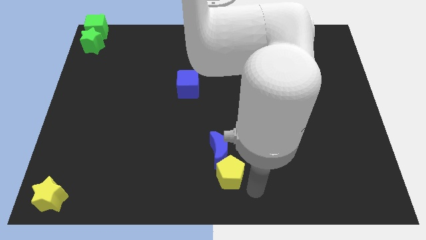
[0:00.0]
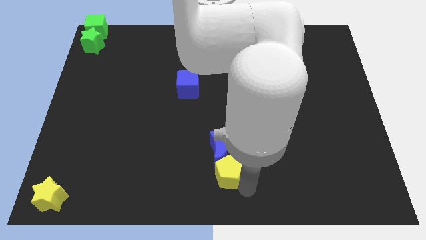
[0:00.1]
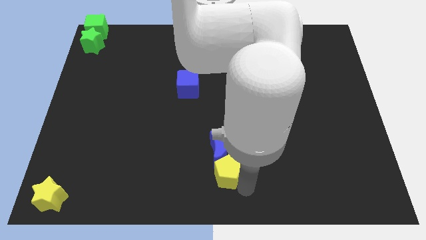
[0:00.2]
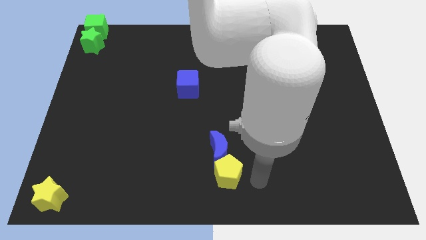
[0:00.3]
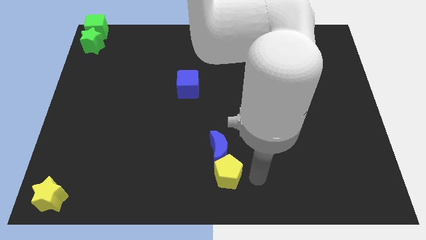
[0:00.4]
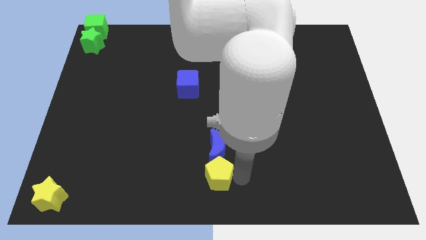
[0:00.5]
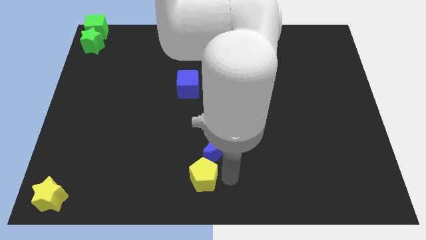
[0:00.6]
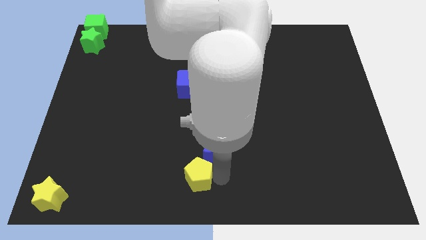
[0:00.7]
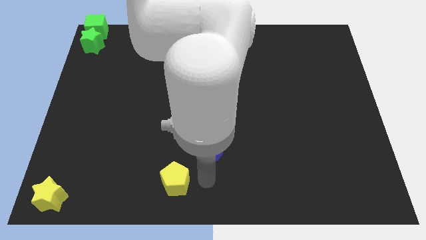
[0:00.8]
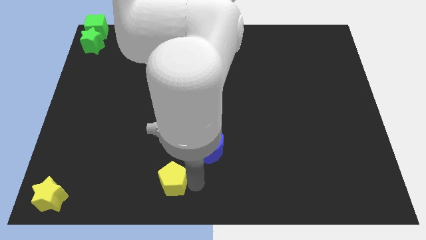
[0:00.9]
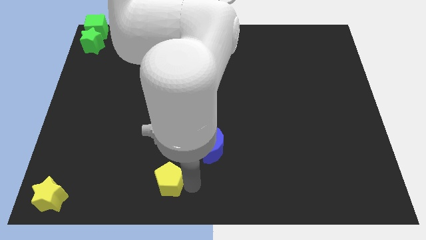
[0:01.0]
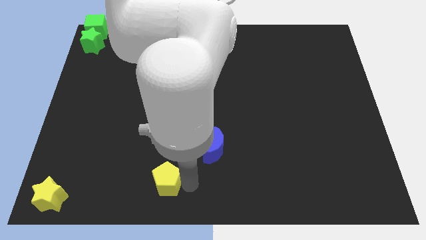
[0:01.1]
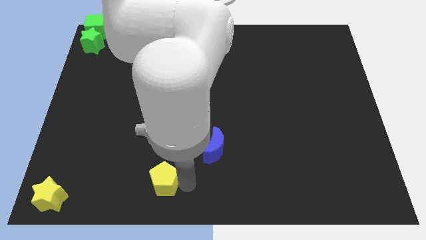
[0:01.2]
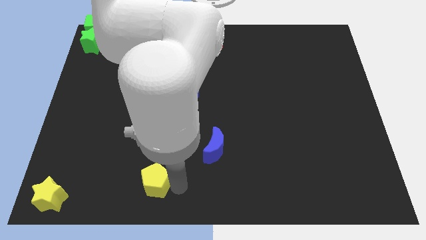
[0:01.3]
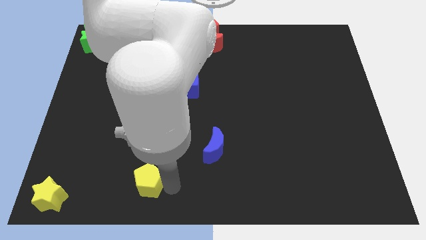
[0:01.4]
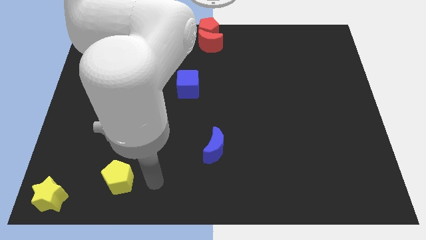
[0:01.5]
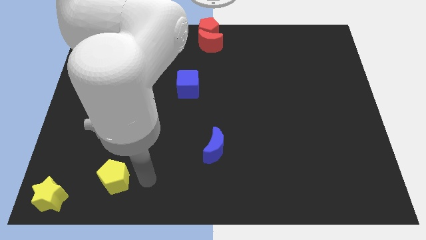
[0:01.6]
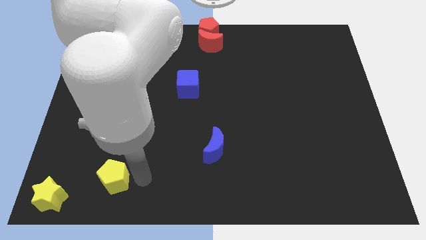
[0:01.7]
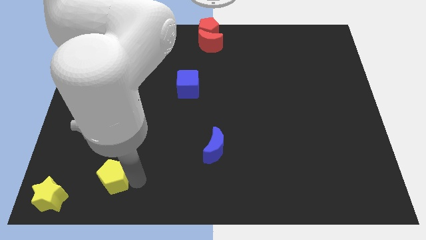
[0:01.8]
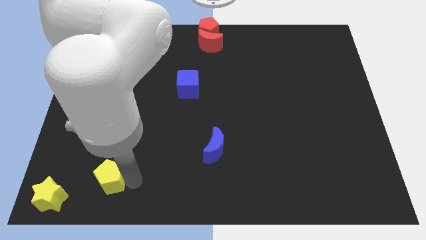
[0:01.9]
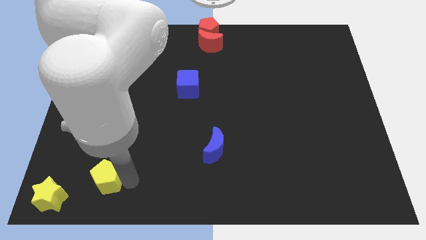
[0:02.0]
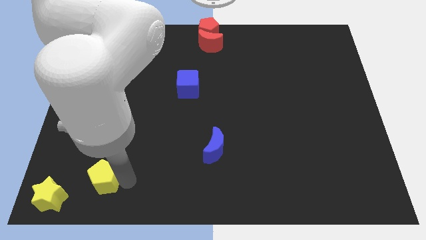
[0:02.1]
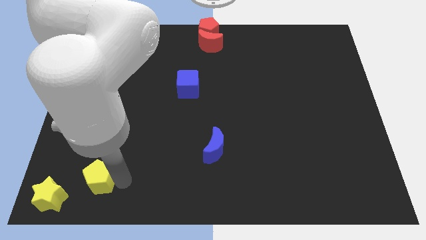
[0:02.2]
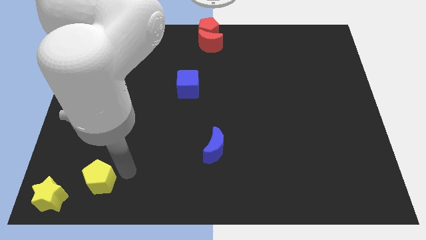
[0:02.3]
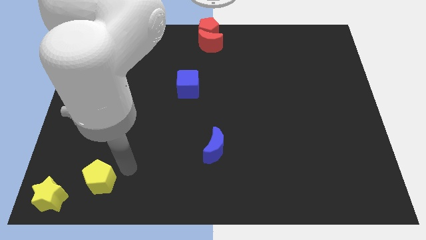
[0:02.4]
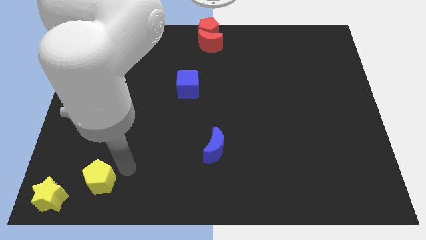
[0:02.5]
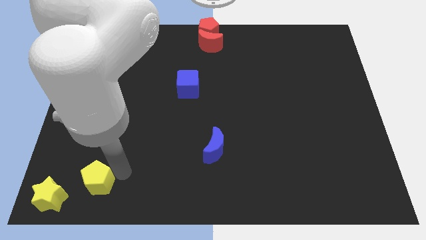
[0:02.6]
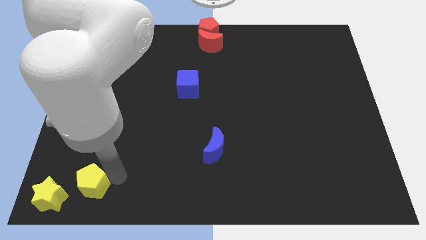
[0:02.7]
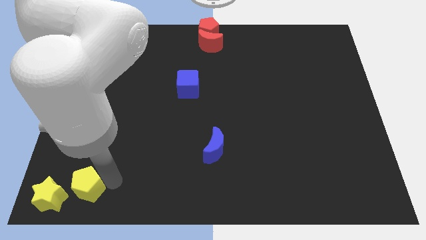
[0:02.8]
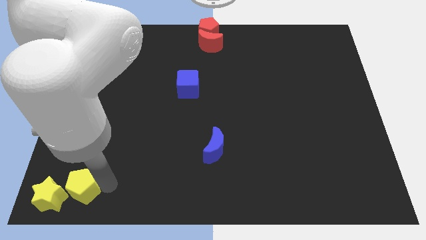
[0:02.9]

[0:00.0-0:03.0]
move yellow pentagon towards yellow star

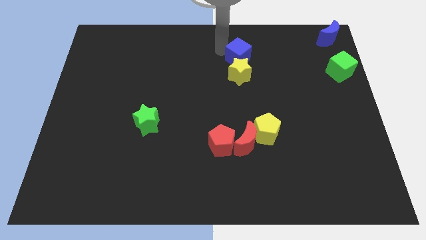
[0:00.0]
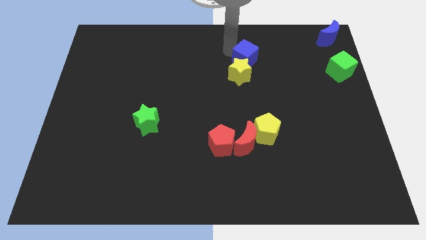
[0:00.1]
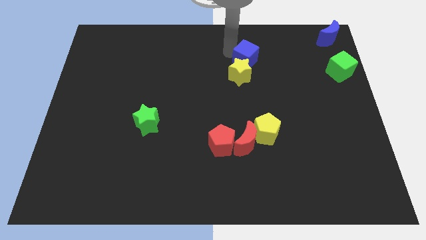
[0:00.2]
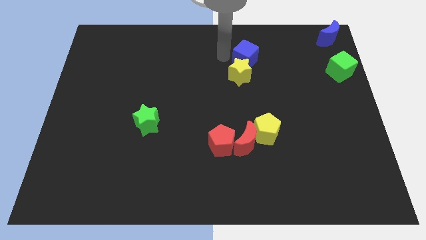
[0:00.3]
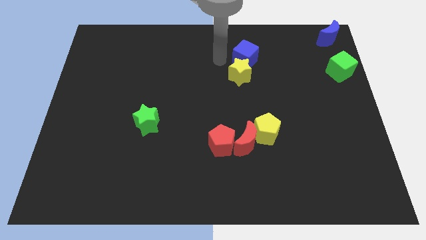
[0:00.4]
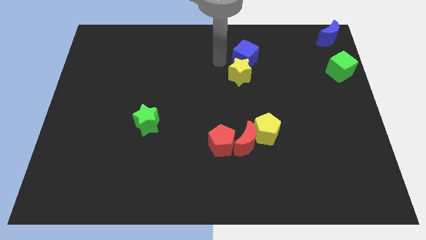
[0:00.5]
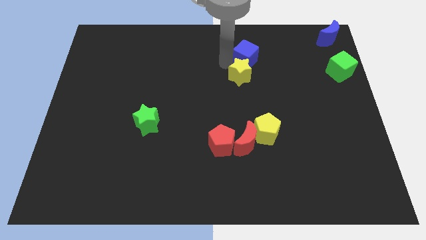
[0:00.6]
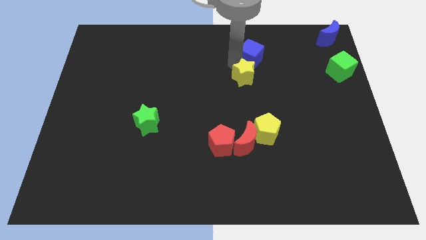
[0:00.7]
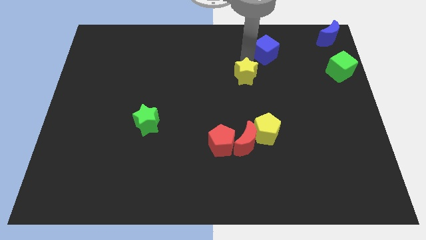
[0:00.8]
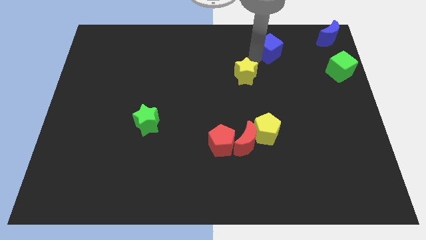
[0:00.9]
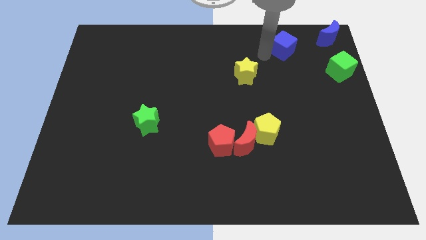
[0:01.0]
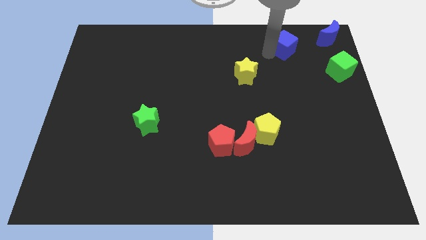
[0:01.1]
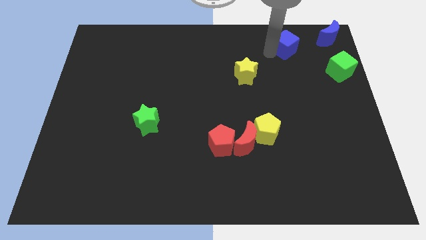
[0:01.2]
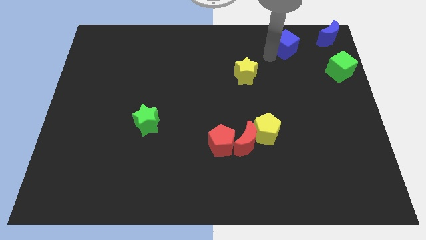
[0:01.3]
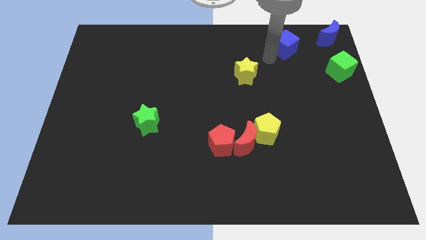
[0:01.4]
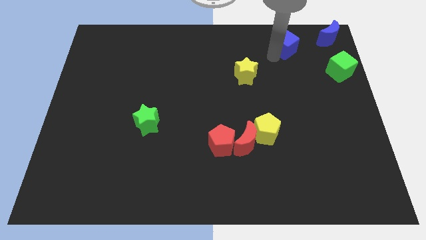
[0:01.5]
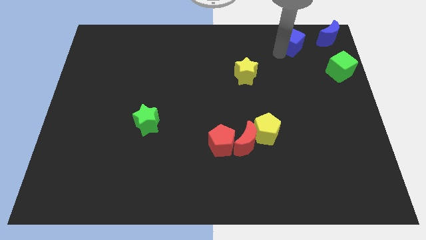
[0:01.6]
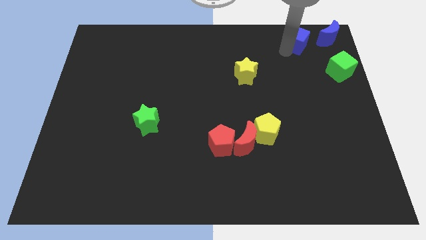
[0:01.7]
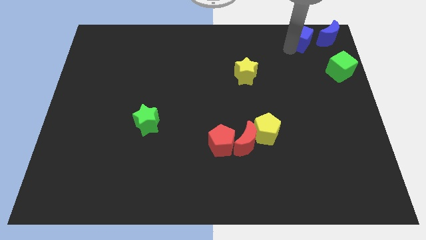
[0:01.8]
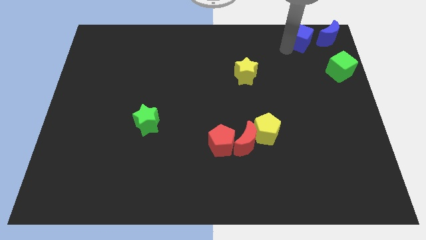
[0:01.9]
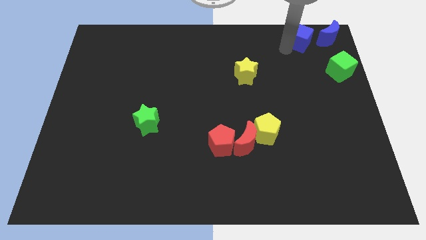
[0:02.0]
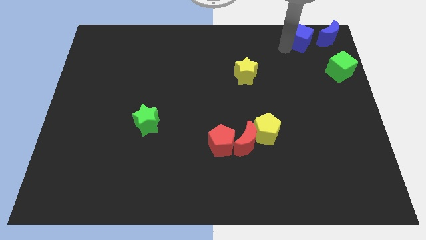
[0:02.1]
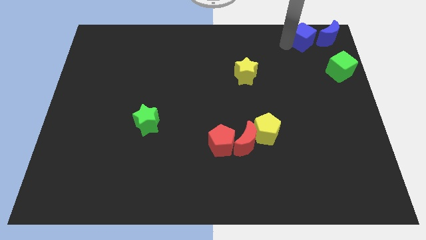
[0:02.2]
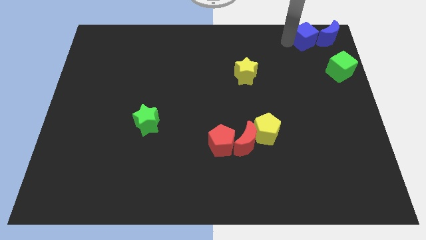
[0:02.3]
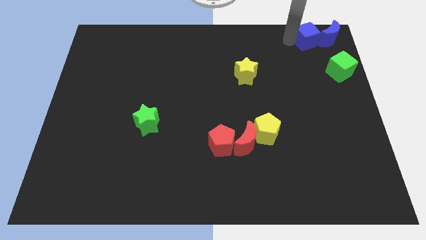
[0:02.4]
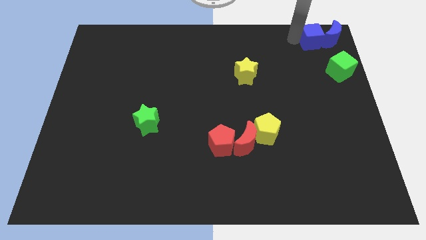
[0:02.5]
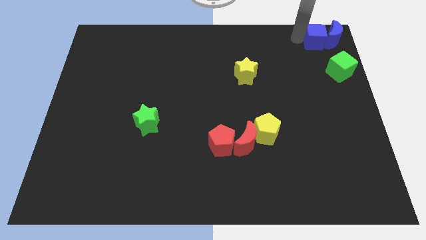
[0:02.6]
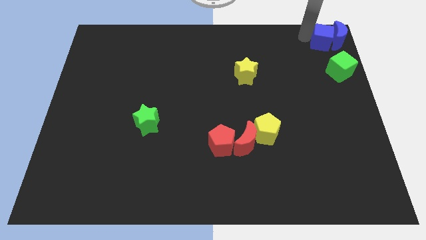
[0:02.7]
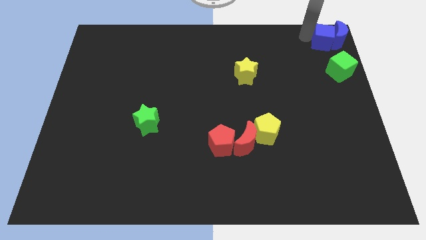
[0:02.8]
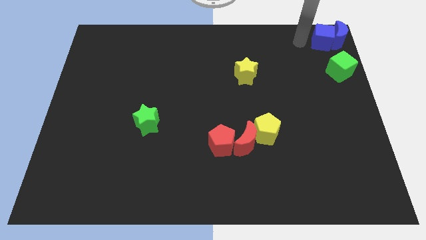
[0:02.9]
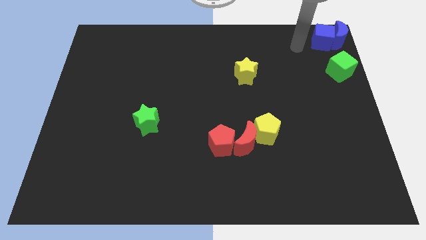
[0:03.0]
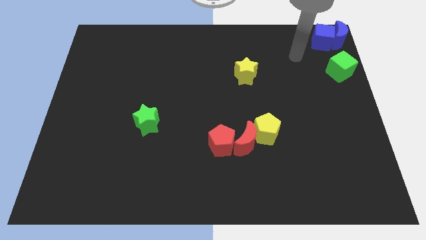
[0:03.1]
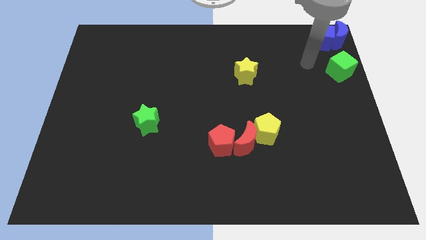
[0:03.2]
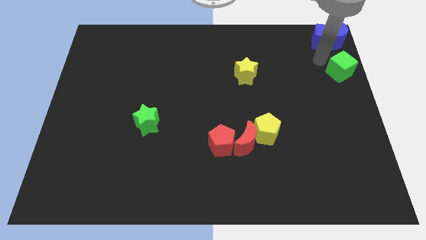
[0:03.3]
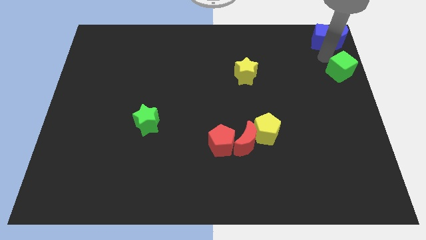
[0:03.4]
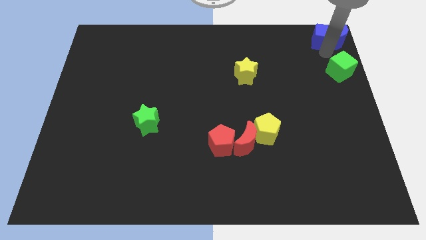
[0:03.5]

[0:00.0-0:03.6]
push the blue cube into the blue moon

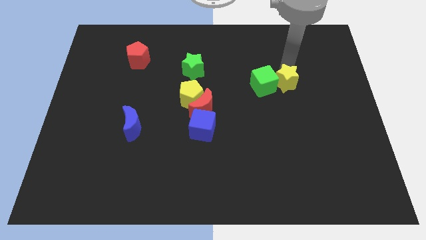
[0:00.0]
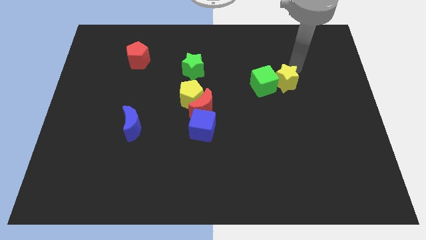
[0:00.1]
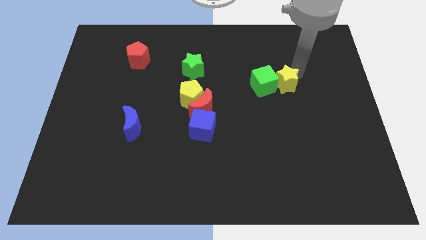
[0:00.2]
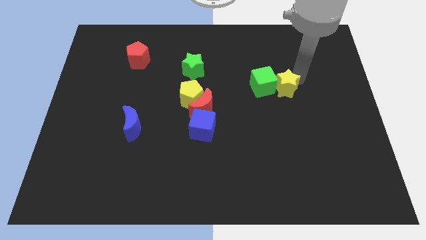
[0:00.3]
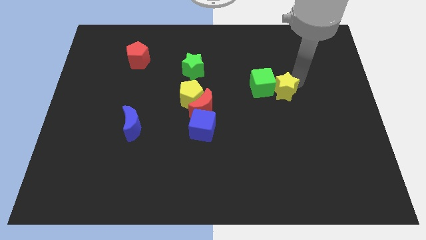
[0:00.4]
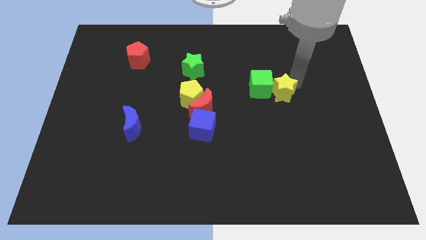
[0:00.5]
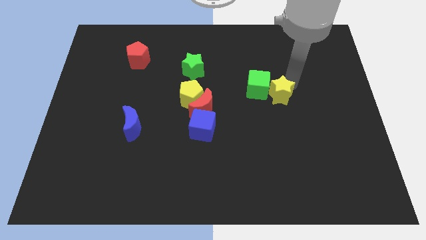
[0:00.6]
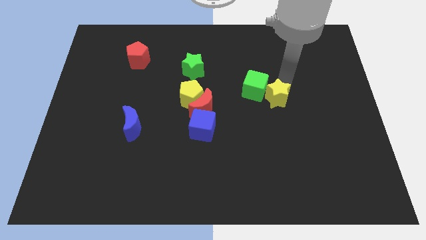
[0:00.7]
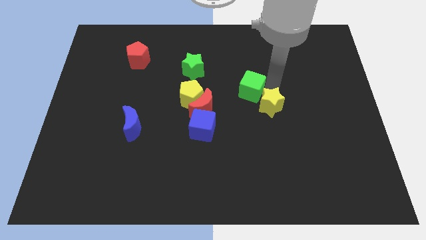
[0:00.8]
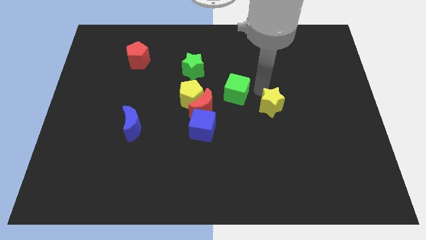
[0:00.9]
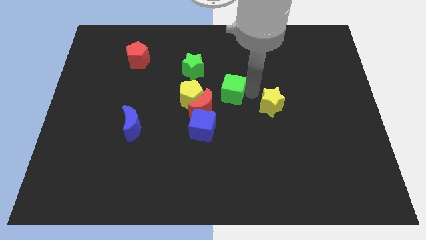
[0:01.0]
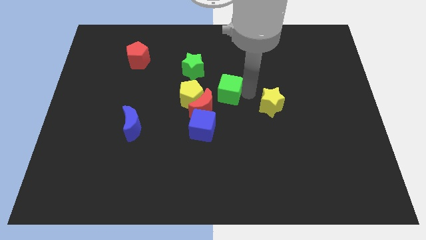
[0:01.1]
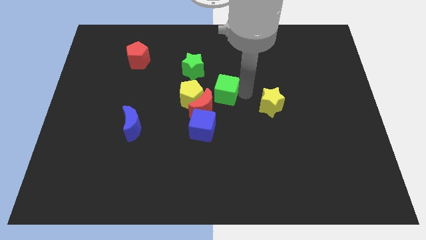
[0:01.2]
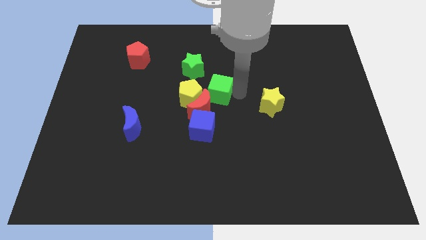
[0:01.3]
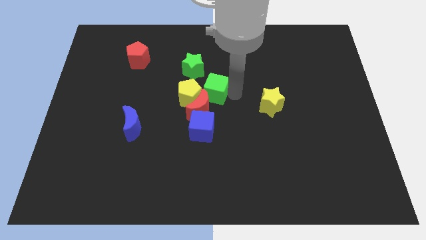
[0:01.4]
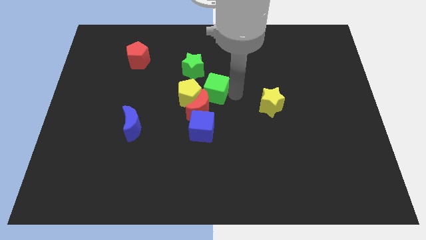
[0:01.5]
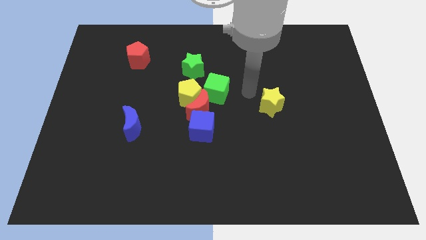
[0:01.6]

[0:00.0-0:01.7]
push the green cube into the group of blocks

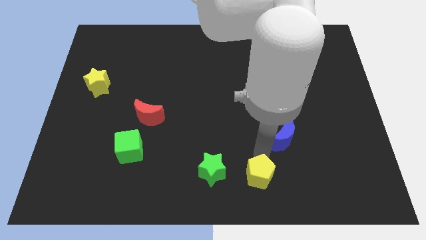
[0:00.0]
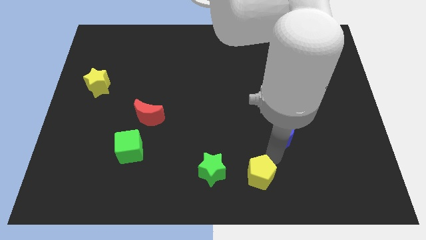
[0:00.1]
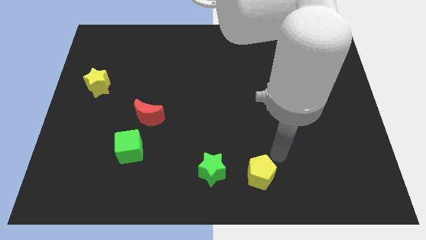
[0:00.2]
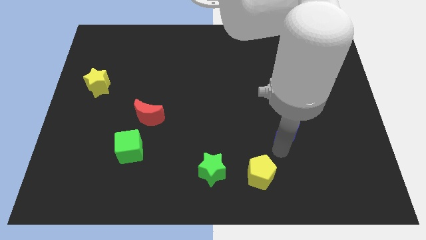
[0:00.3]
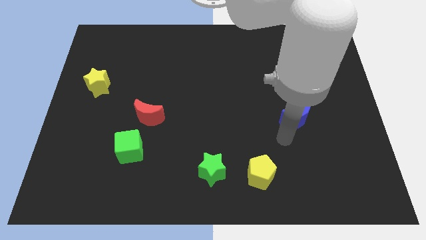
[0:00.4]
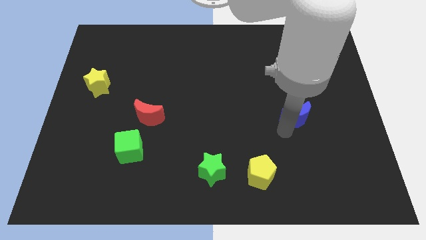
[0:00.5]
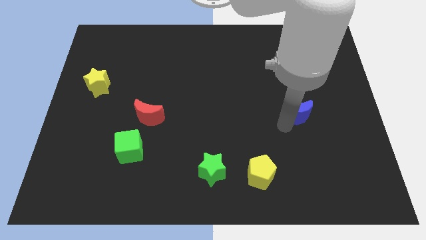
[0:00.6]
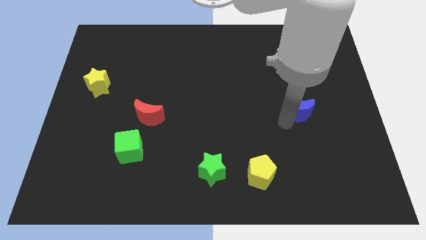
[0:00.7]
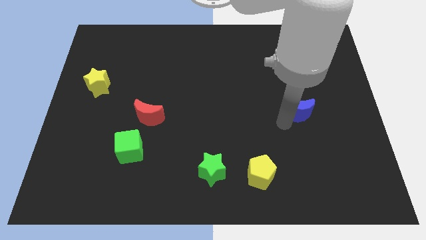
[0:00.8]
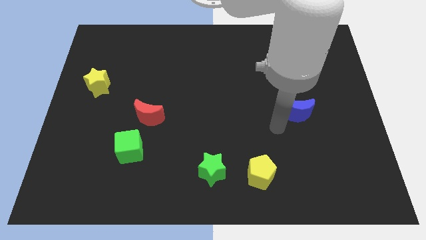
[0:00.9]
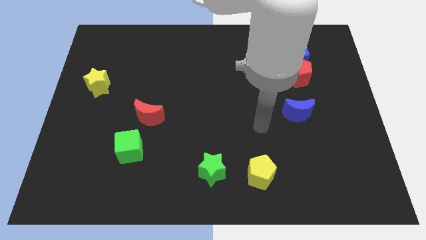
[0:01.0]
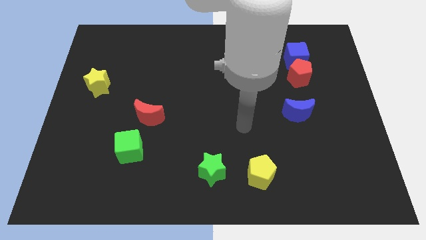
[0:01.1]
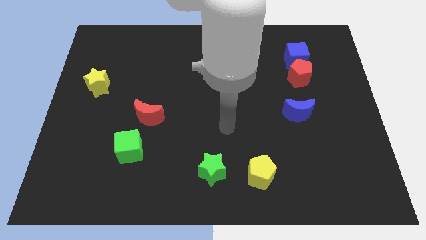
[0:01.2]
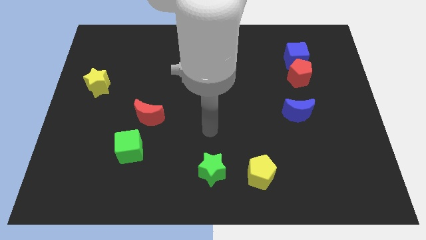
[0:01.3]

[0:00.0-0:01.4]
push the blue moon slightly to the top of the board
